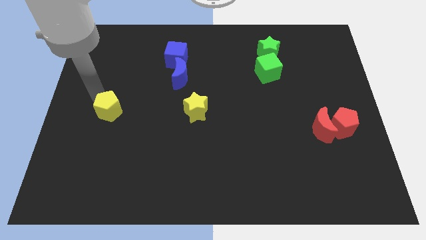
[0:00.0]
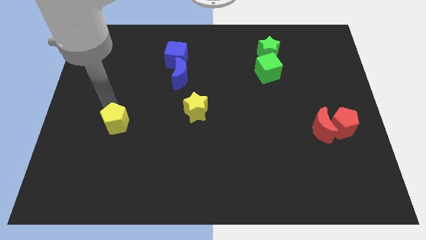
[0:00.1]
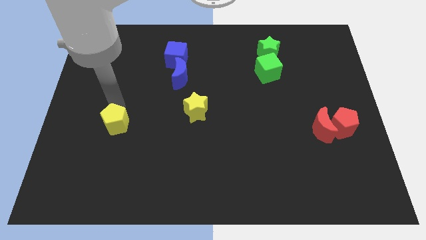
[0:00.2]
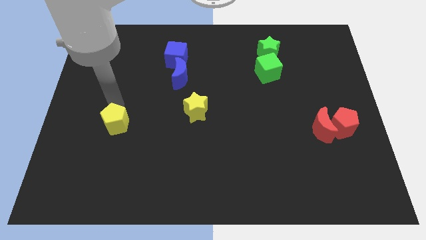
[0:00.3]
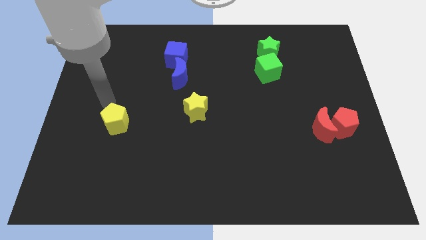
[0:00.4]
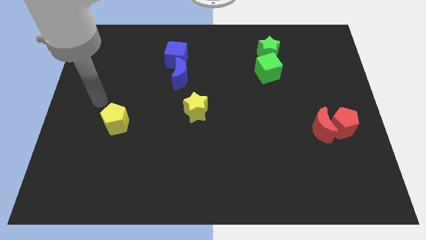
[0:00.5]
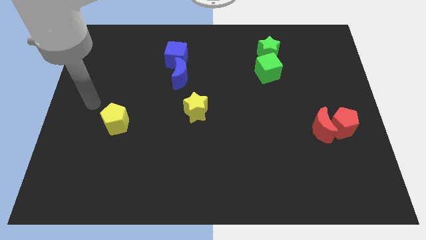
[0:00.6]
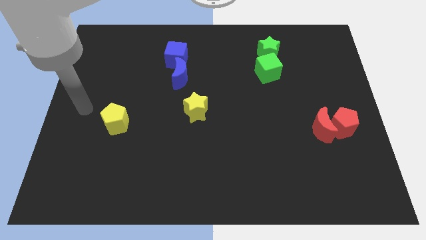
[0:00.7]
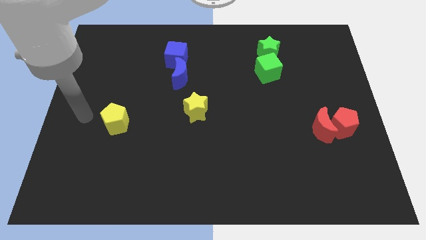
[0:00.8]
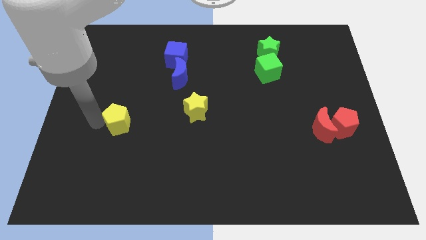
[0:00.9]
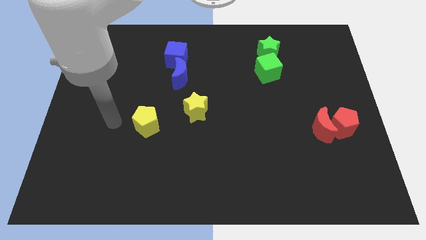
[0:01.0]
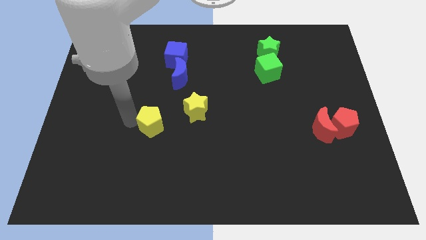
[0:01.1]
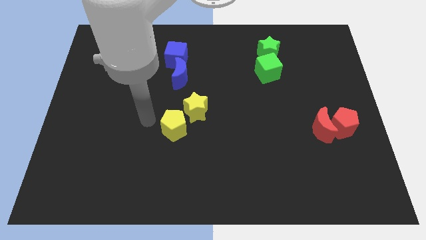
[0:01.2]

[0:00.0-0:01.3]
push yellow pentagon below blue crescent

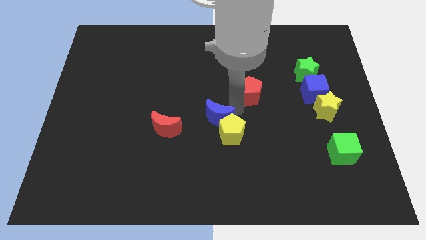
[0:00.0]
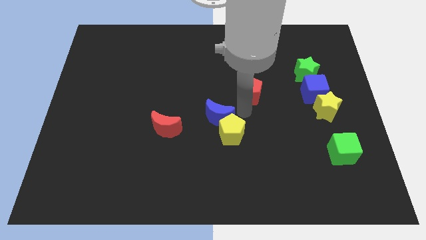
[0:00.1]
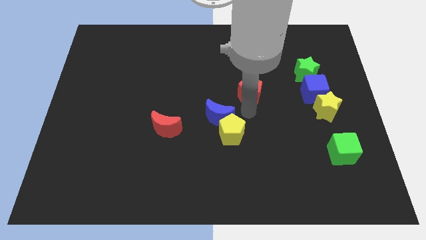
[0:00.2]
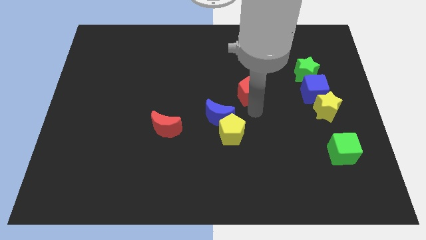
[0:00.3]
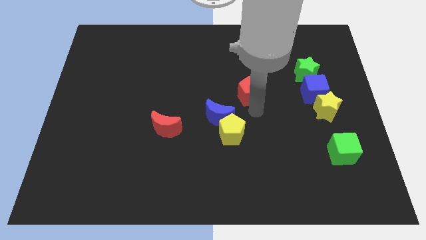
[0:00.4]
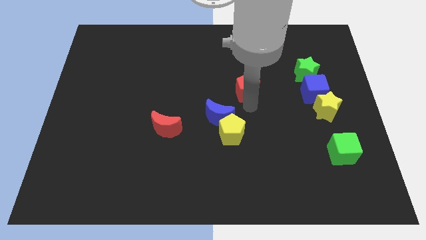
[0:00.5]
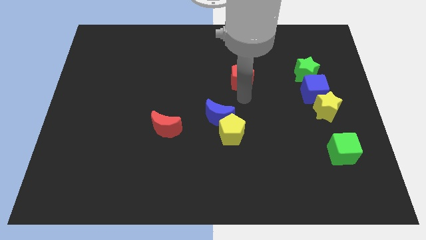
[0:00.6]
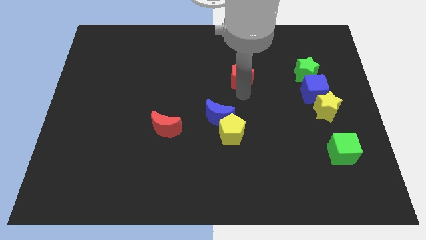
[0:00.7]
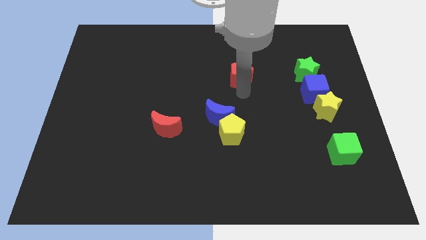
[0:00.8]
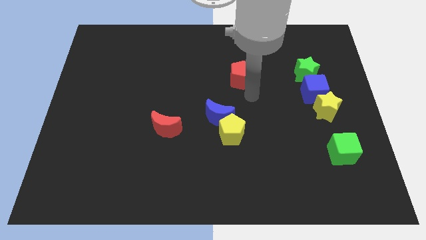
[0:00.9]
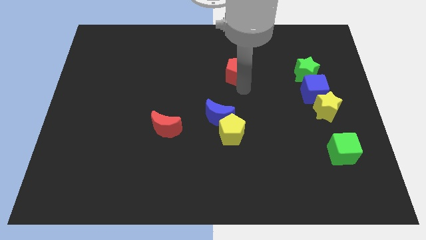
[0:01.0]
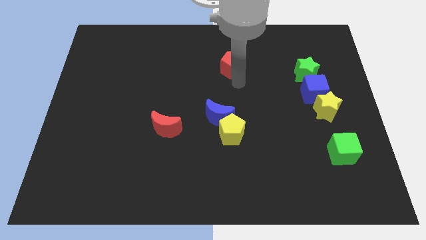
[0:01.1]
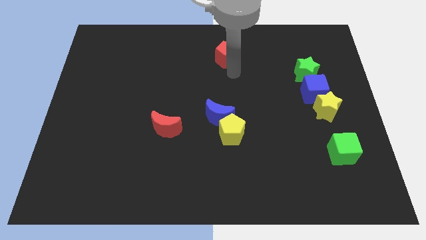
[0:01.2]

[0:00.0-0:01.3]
push the red pentagon to the top of the blue crescent

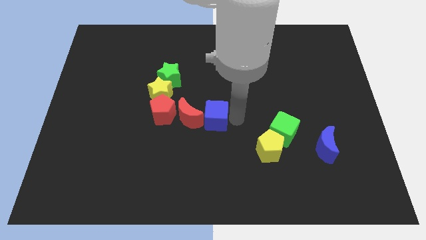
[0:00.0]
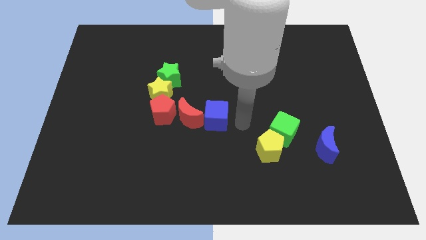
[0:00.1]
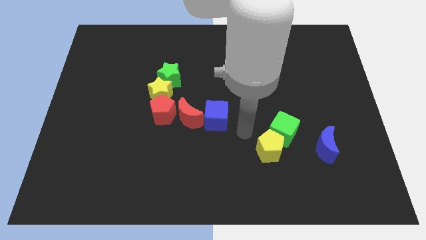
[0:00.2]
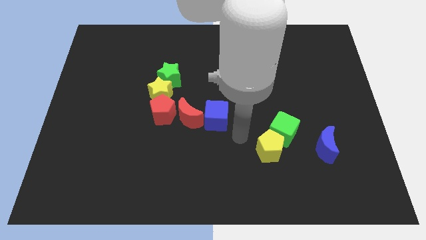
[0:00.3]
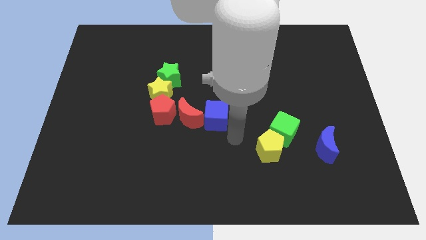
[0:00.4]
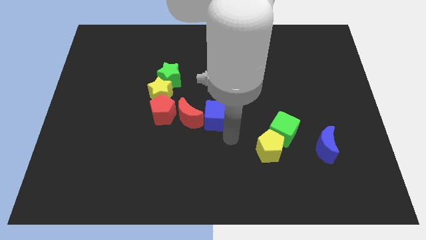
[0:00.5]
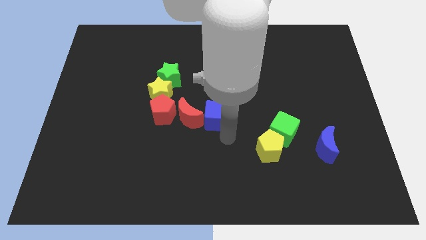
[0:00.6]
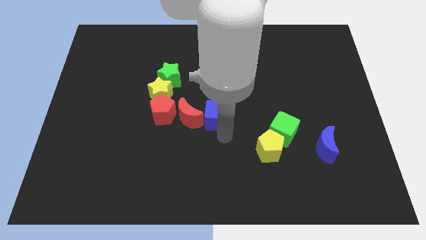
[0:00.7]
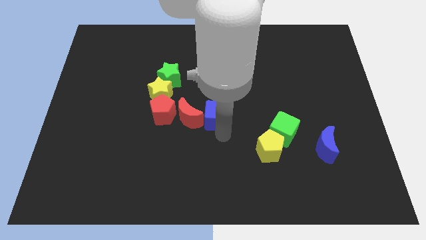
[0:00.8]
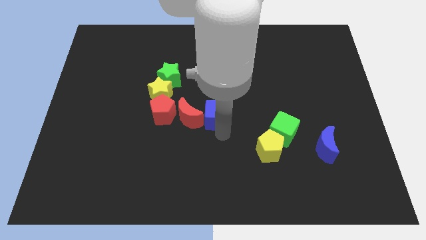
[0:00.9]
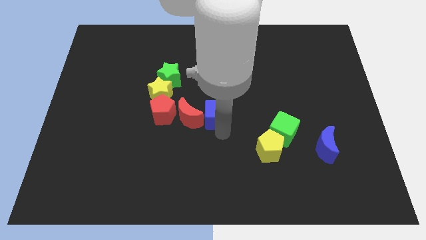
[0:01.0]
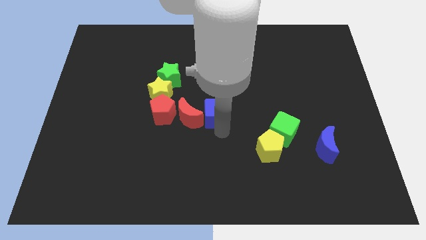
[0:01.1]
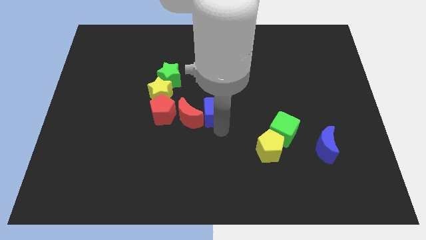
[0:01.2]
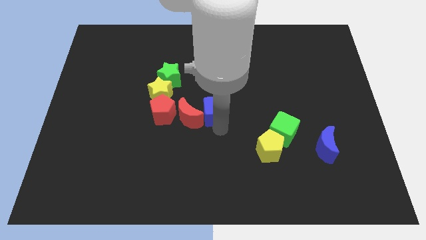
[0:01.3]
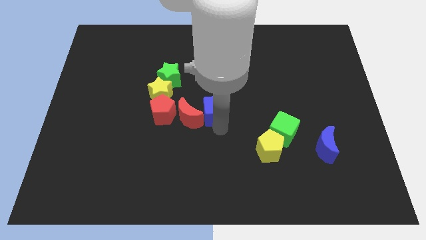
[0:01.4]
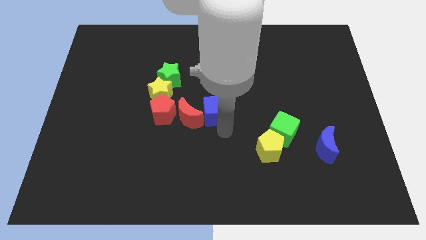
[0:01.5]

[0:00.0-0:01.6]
adjust the blue cube at the right side of the red moon

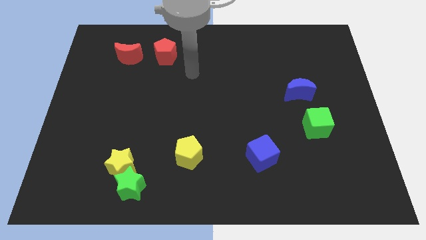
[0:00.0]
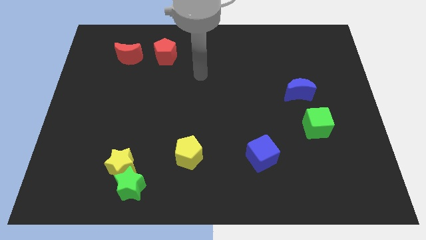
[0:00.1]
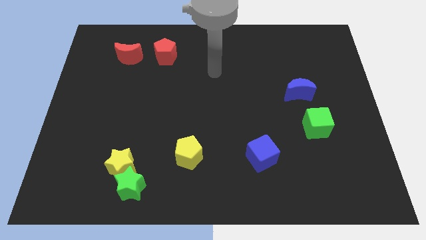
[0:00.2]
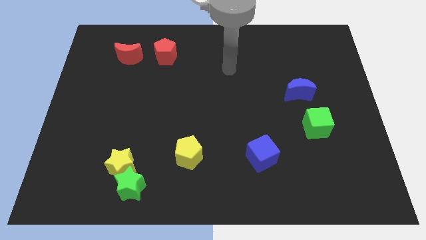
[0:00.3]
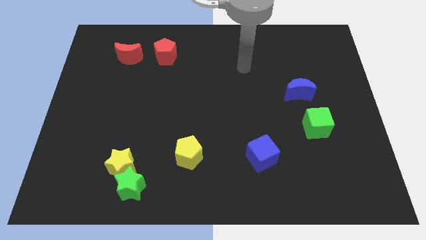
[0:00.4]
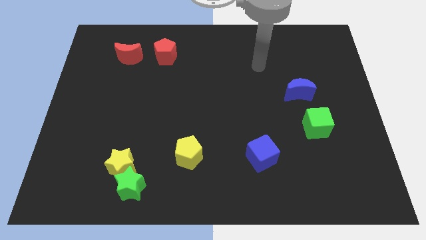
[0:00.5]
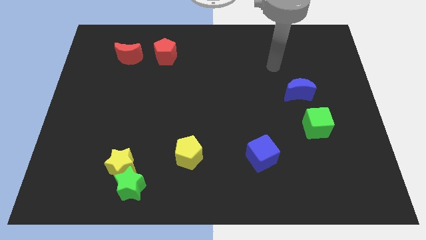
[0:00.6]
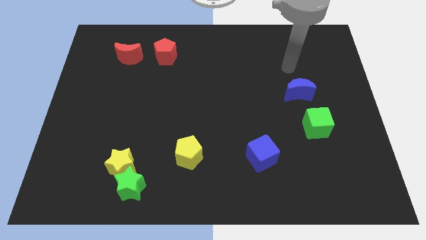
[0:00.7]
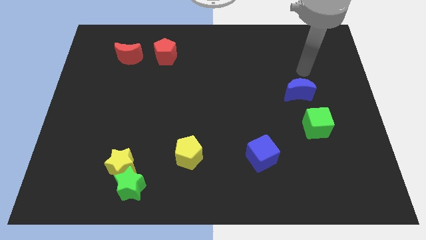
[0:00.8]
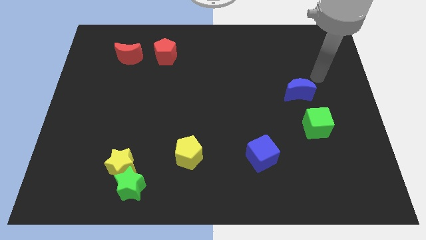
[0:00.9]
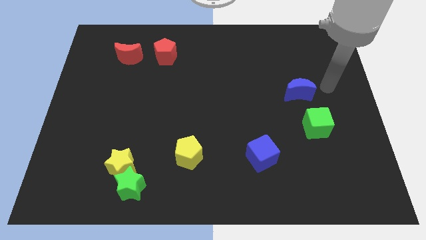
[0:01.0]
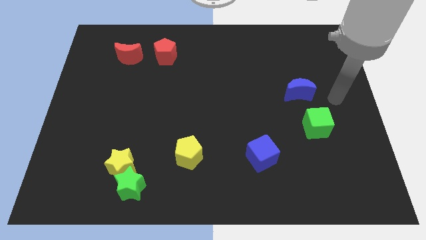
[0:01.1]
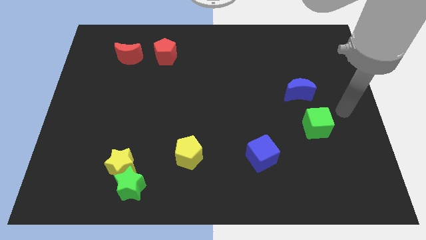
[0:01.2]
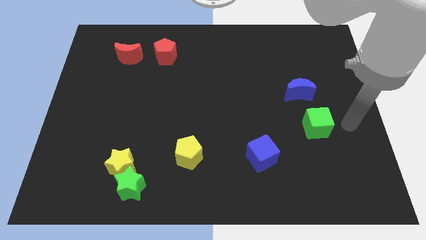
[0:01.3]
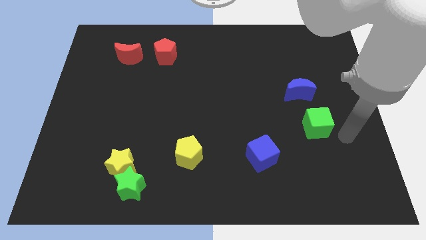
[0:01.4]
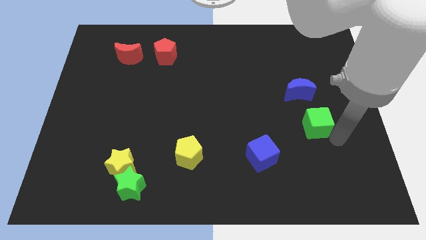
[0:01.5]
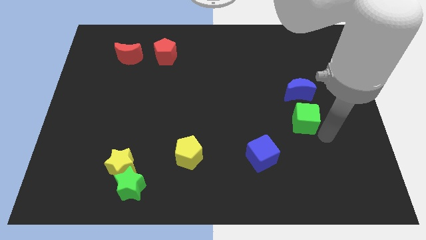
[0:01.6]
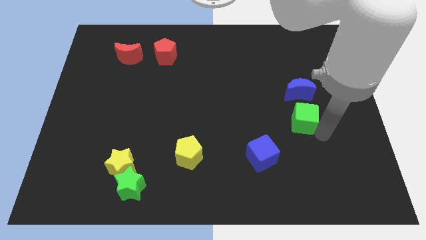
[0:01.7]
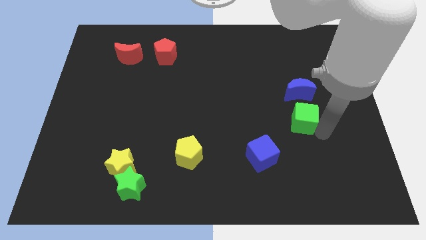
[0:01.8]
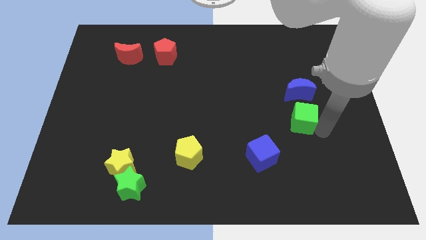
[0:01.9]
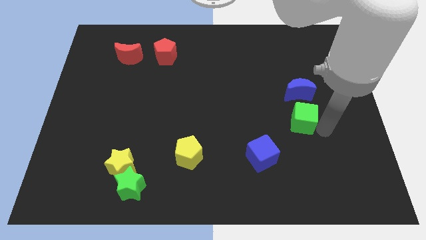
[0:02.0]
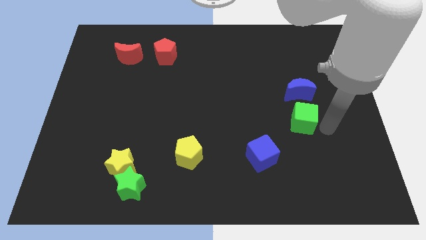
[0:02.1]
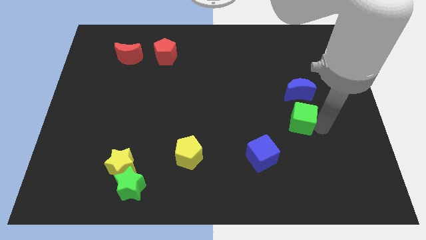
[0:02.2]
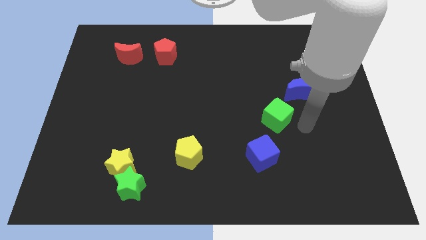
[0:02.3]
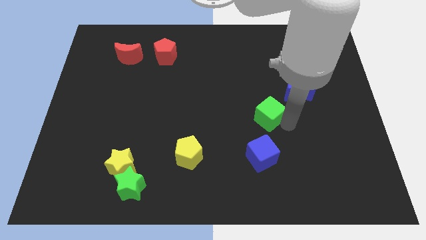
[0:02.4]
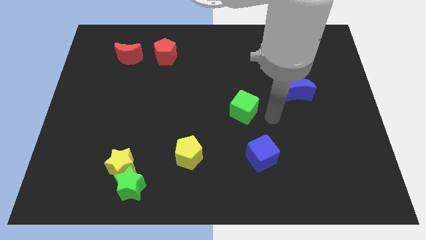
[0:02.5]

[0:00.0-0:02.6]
put the green cube above the blue cube

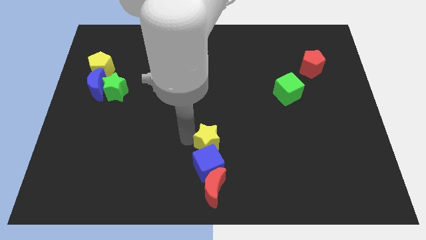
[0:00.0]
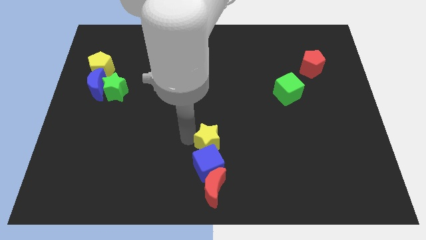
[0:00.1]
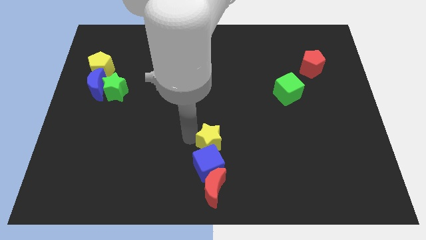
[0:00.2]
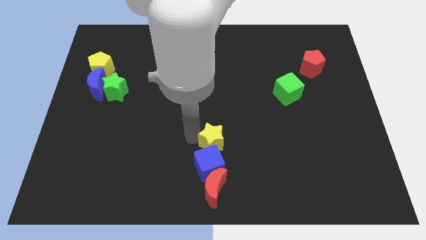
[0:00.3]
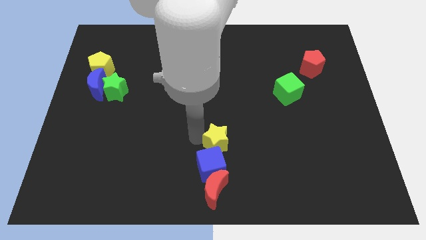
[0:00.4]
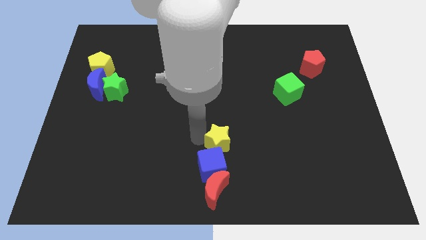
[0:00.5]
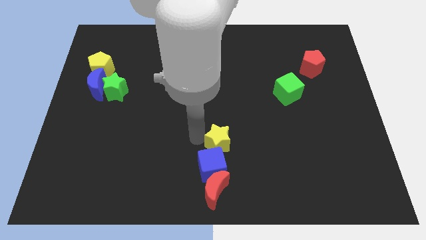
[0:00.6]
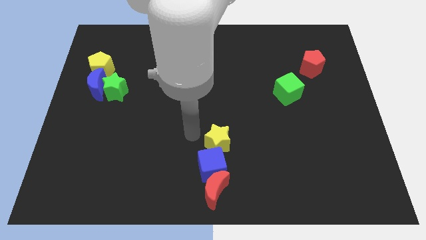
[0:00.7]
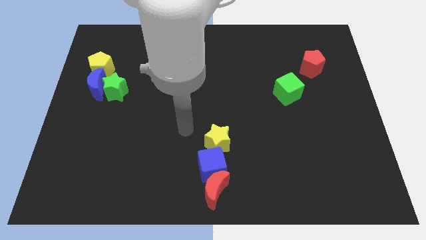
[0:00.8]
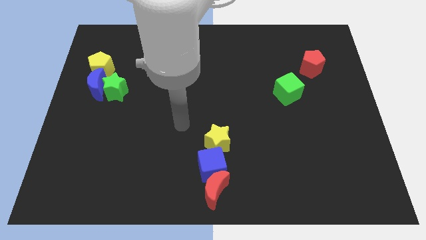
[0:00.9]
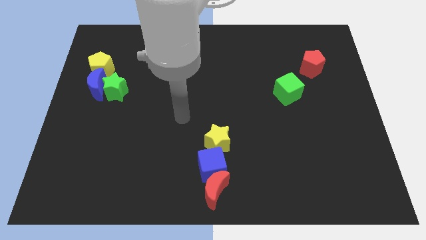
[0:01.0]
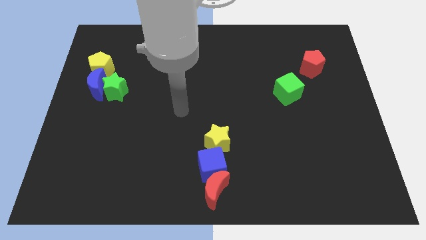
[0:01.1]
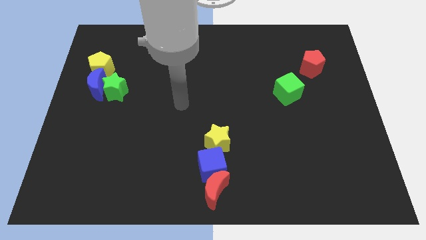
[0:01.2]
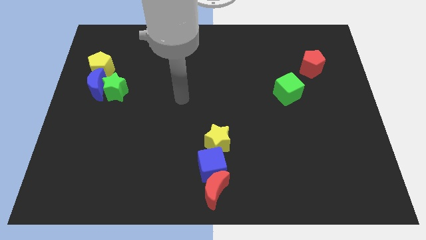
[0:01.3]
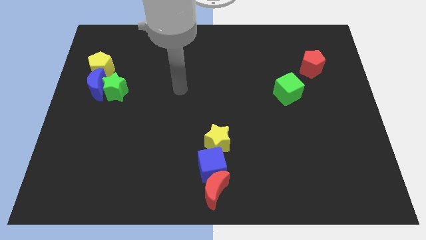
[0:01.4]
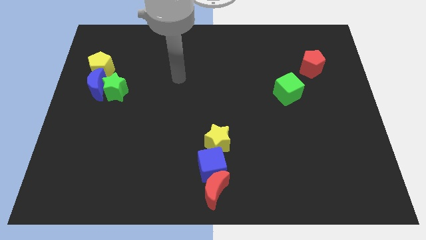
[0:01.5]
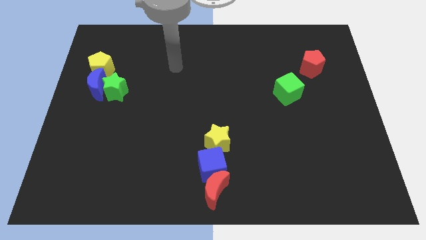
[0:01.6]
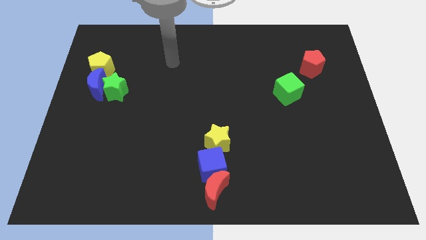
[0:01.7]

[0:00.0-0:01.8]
move your arm away from yellow pentagon

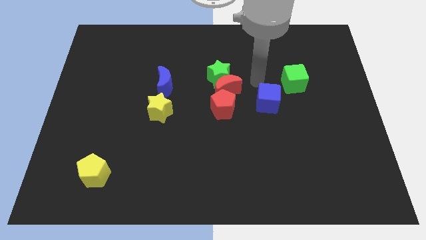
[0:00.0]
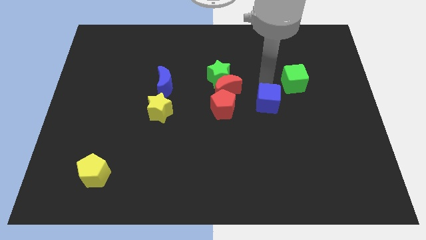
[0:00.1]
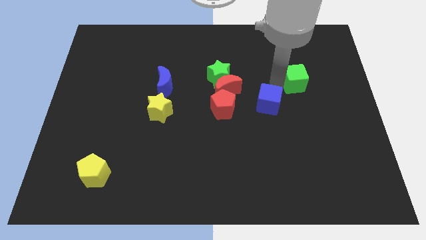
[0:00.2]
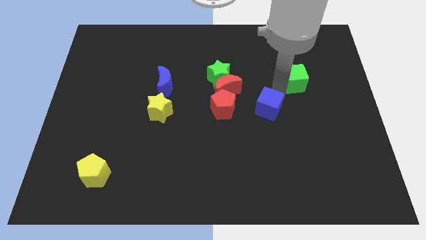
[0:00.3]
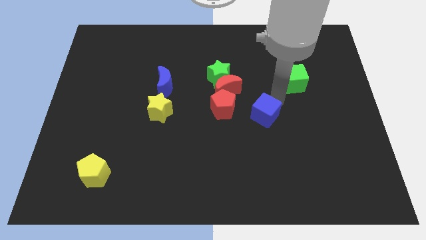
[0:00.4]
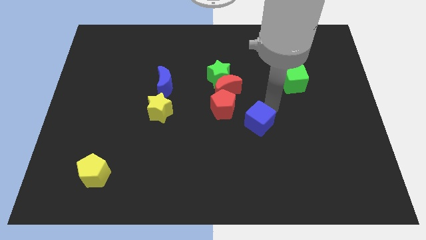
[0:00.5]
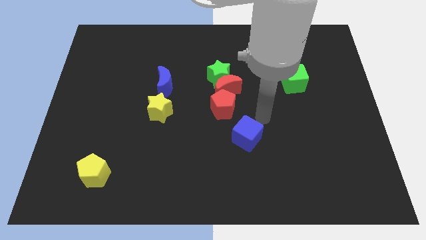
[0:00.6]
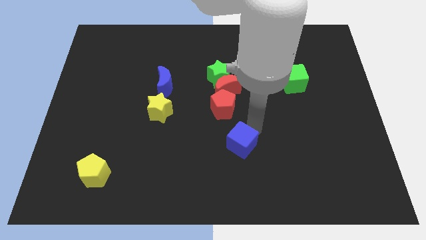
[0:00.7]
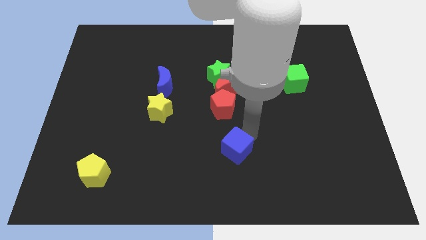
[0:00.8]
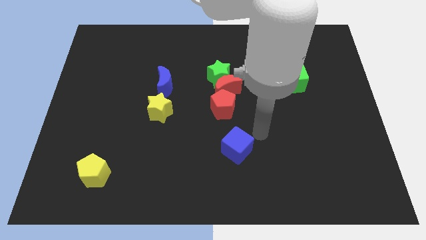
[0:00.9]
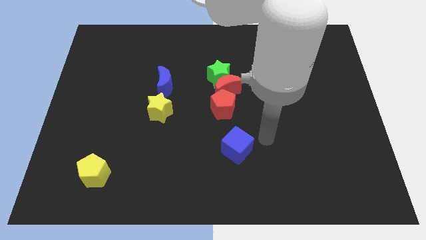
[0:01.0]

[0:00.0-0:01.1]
push the blue cube below the red pentagon
